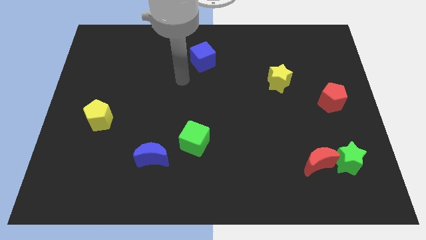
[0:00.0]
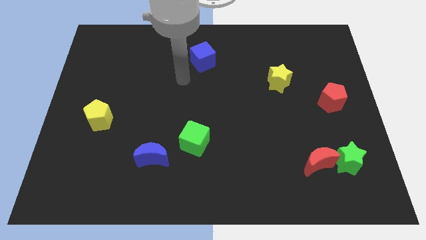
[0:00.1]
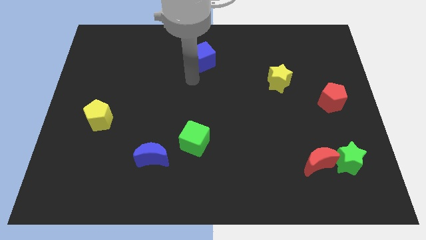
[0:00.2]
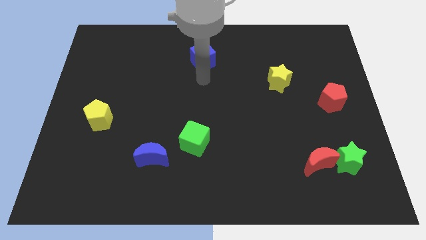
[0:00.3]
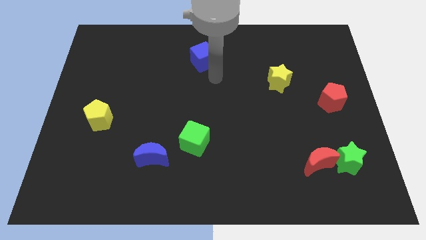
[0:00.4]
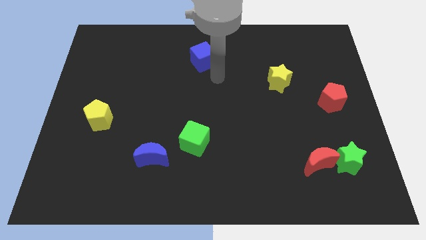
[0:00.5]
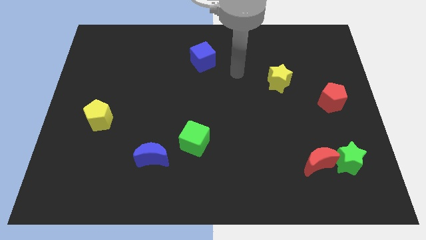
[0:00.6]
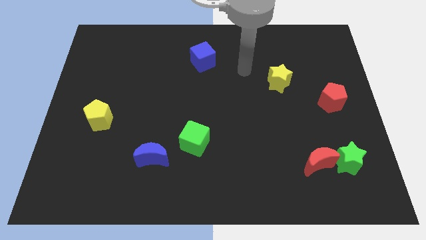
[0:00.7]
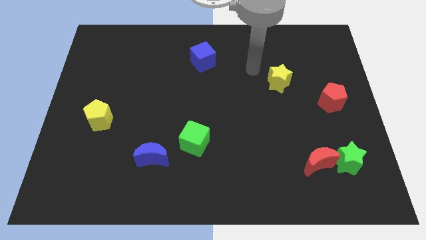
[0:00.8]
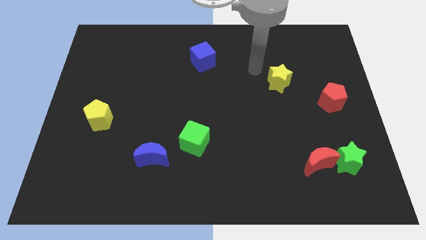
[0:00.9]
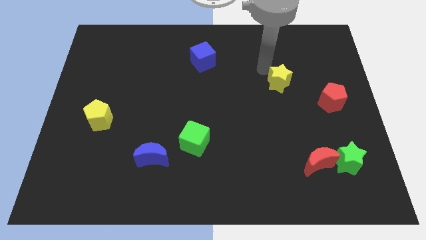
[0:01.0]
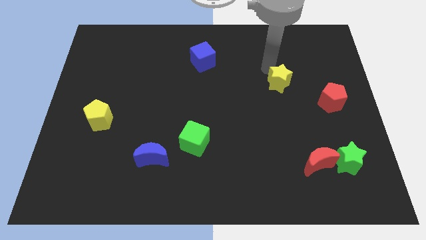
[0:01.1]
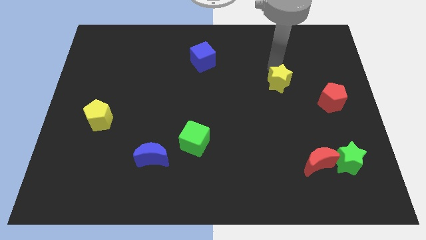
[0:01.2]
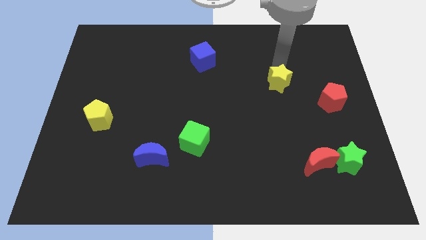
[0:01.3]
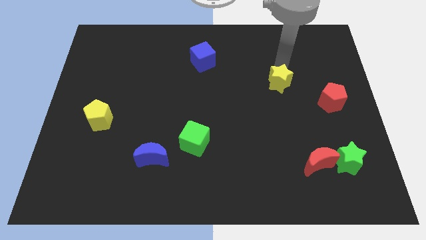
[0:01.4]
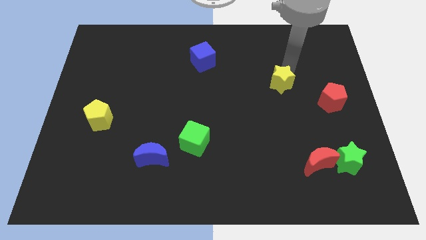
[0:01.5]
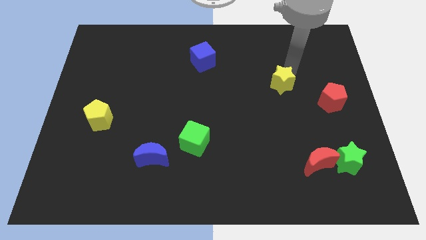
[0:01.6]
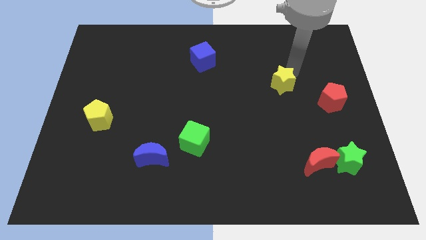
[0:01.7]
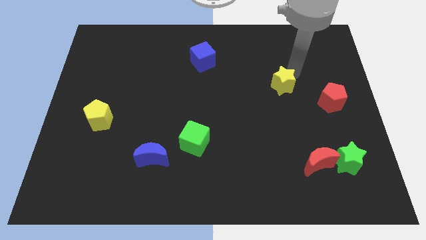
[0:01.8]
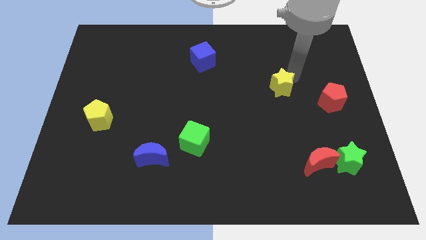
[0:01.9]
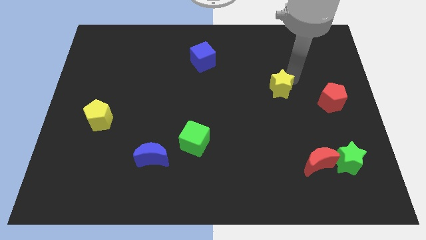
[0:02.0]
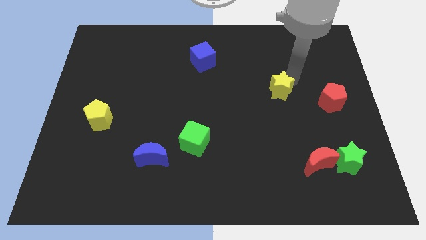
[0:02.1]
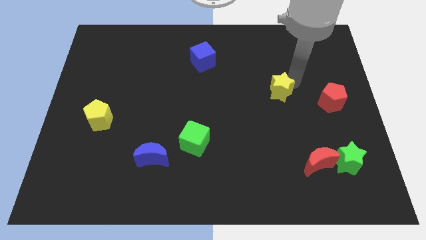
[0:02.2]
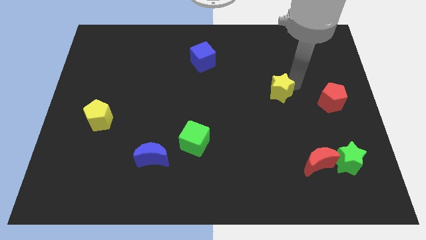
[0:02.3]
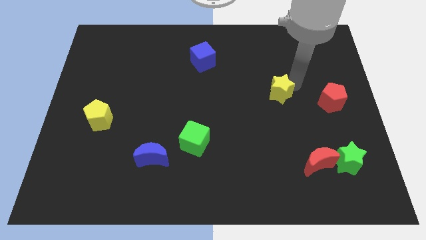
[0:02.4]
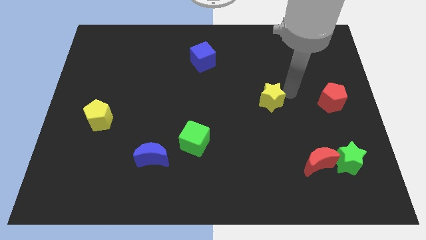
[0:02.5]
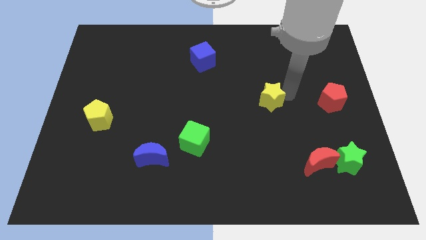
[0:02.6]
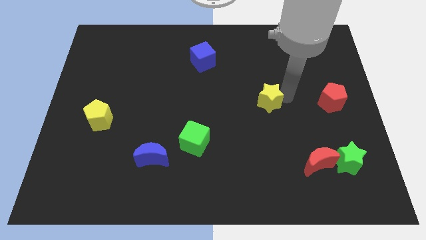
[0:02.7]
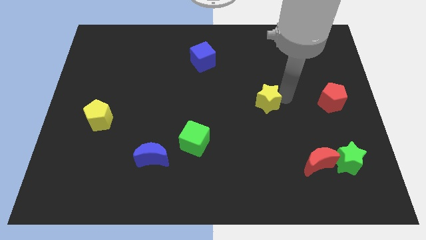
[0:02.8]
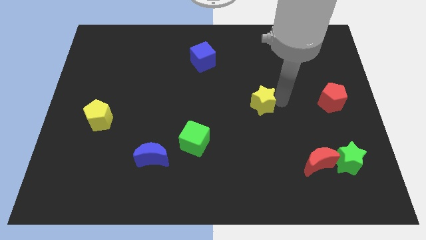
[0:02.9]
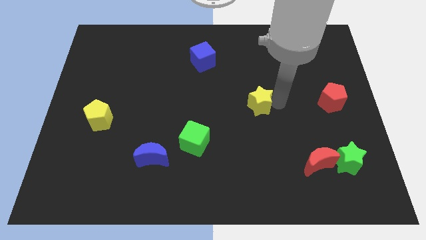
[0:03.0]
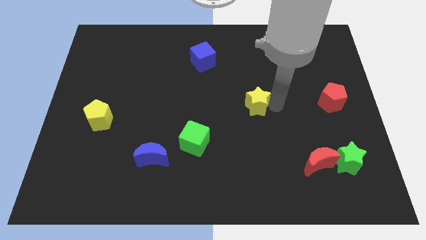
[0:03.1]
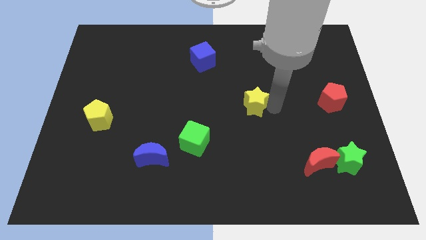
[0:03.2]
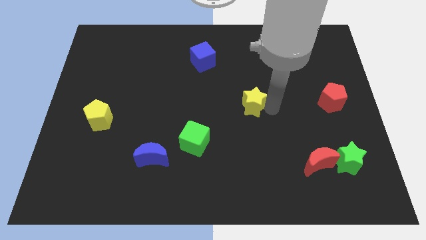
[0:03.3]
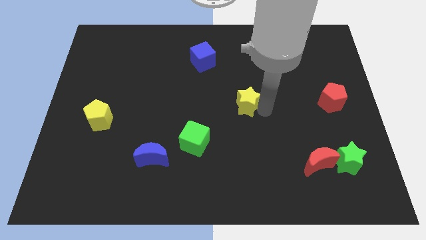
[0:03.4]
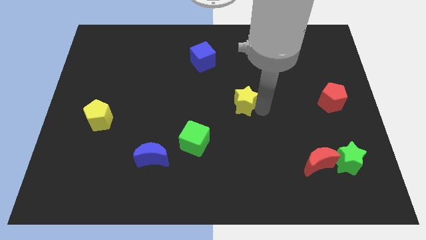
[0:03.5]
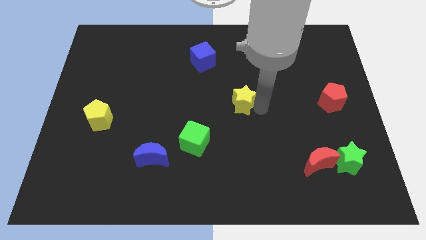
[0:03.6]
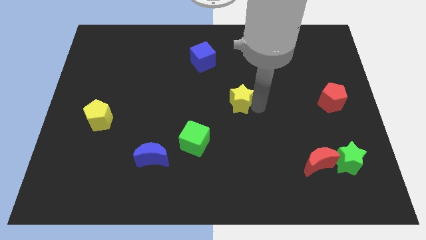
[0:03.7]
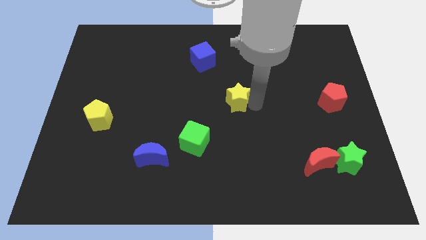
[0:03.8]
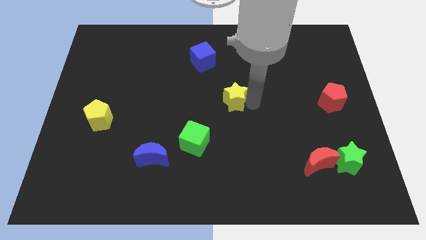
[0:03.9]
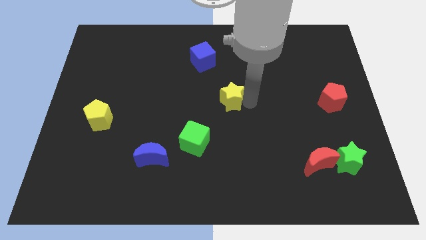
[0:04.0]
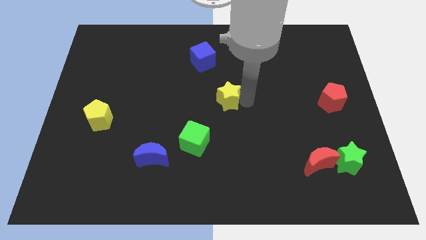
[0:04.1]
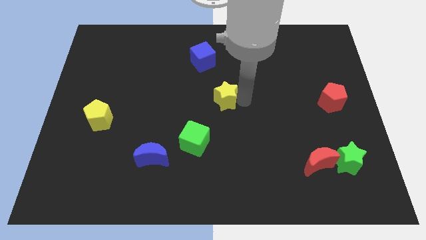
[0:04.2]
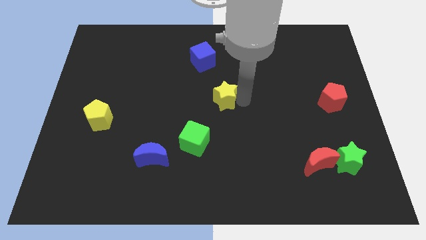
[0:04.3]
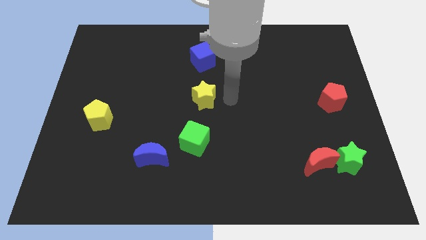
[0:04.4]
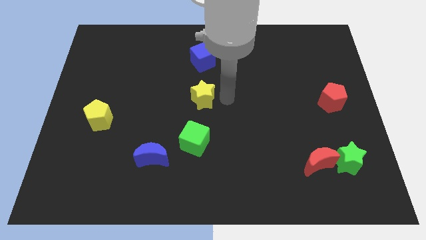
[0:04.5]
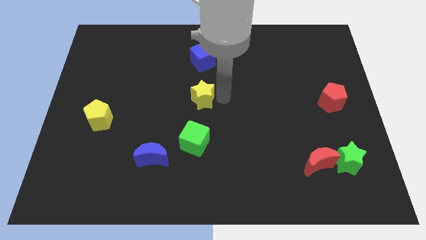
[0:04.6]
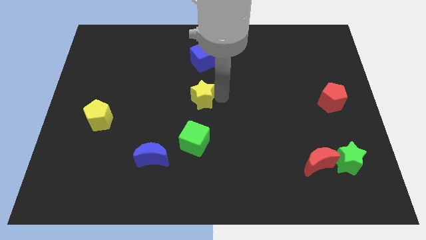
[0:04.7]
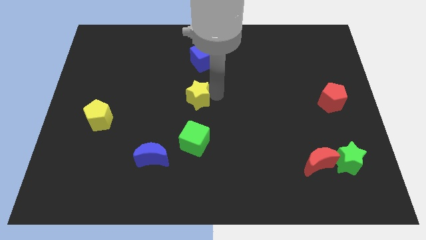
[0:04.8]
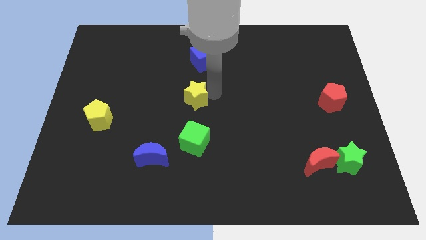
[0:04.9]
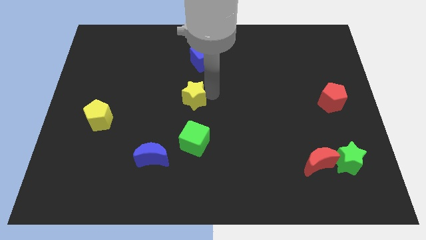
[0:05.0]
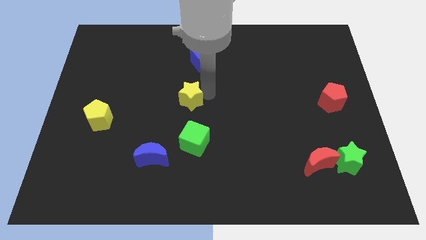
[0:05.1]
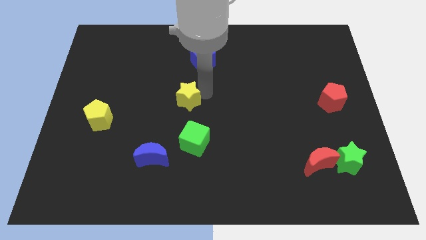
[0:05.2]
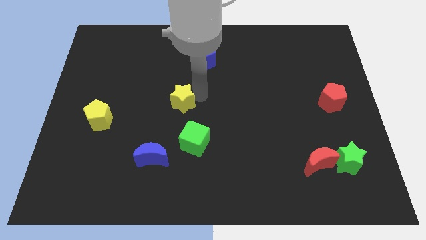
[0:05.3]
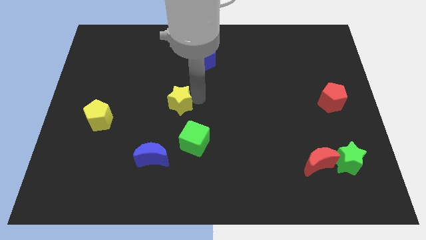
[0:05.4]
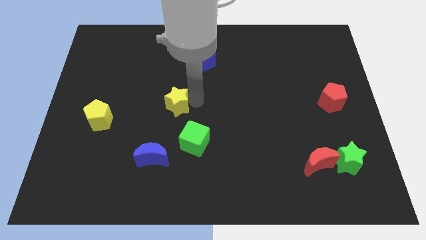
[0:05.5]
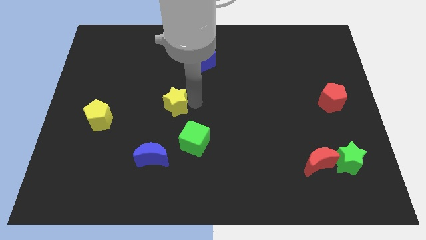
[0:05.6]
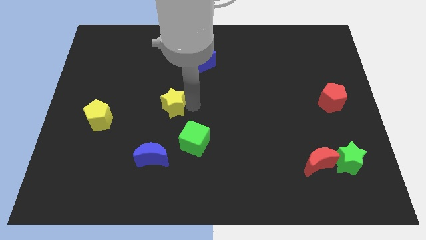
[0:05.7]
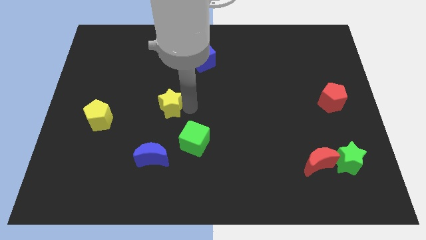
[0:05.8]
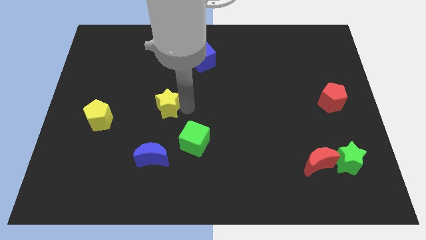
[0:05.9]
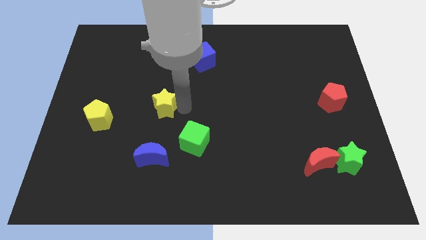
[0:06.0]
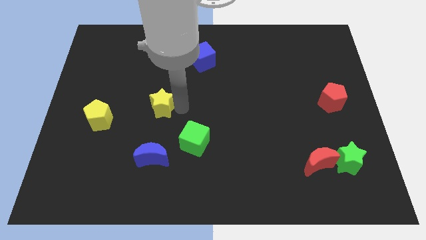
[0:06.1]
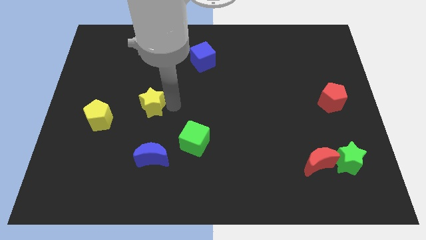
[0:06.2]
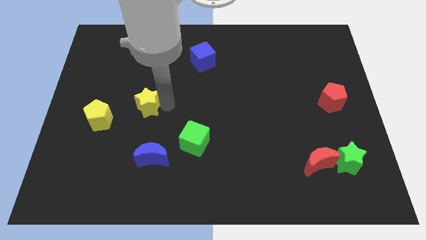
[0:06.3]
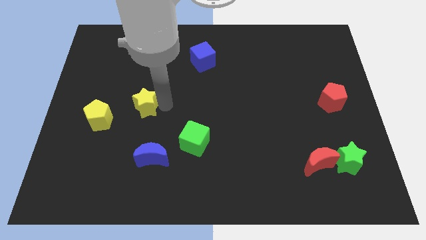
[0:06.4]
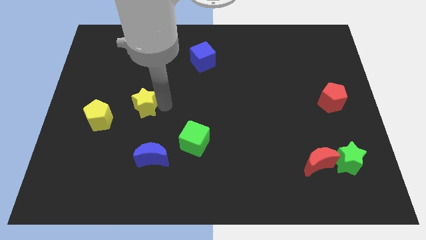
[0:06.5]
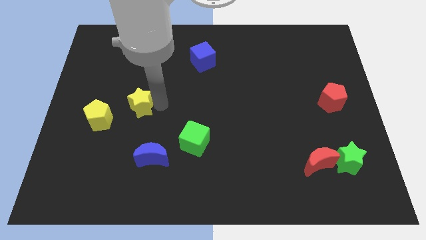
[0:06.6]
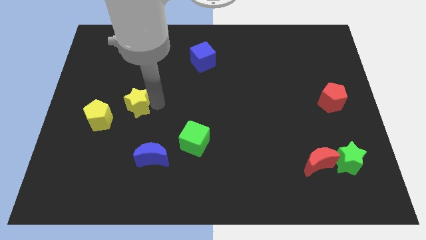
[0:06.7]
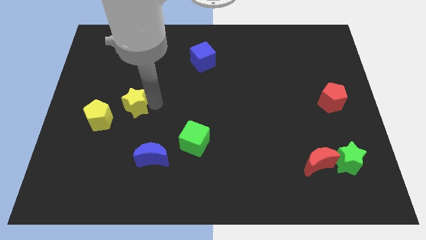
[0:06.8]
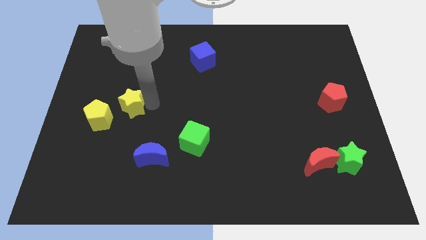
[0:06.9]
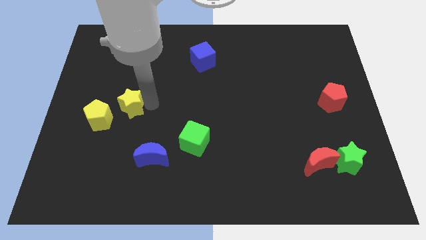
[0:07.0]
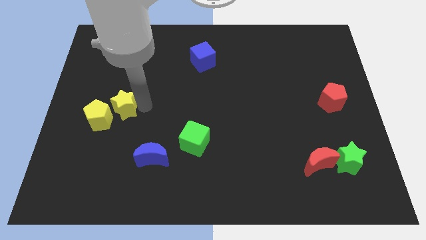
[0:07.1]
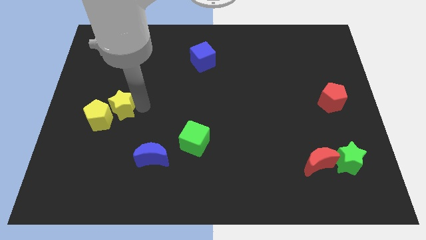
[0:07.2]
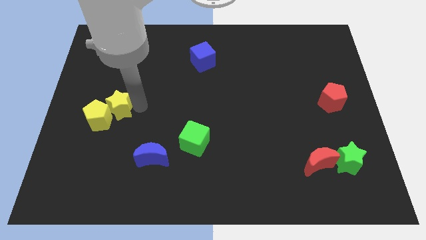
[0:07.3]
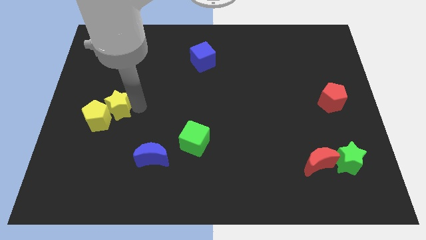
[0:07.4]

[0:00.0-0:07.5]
move the yellow star next to the yellow pentagon

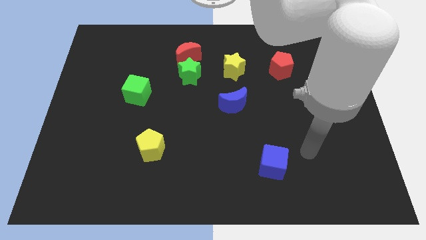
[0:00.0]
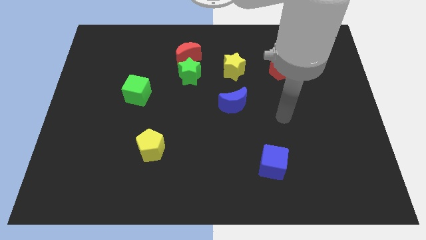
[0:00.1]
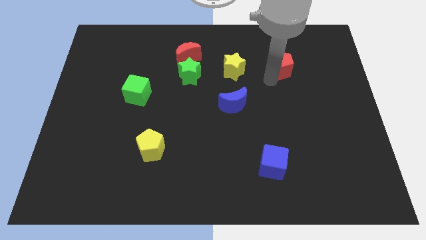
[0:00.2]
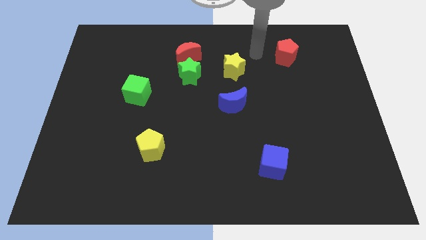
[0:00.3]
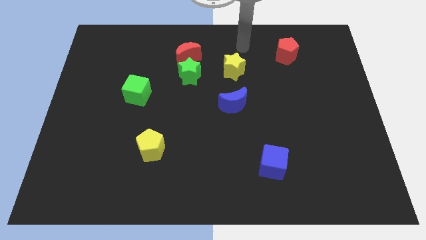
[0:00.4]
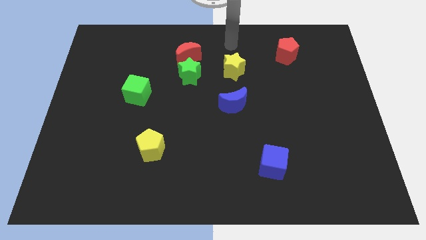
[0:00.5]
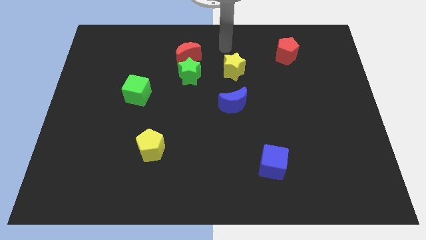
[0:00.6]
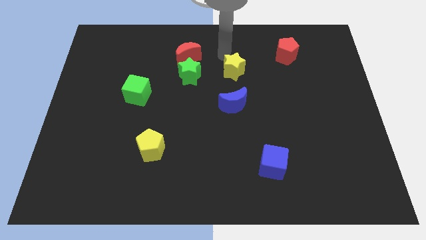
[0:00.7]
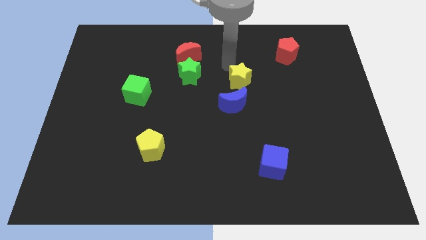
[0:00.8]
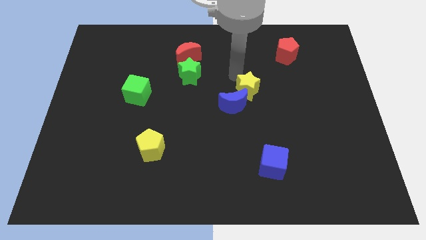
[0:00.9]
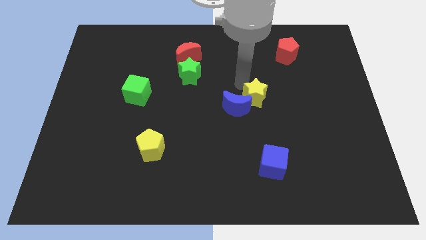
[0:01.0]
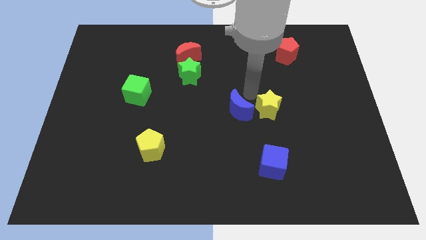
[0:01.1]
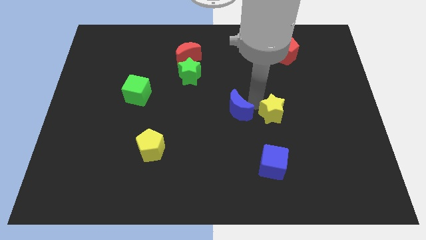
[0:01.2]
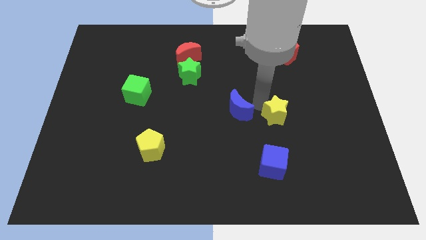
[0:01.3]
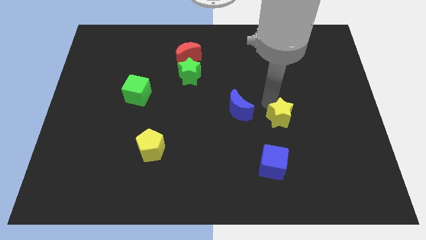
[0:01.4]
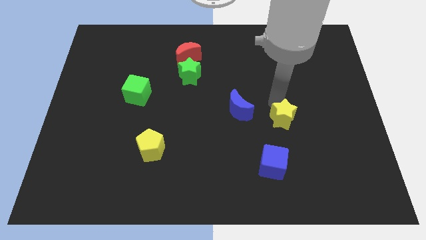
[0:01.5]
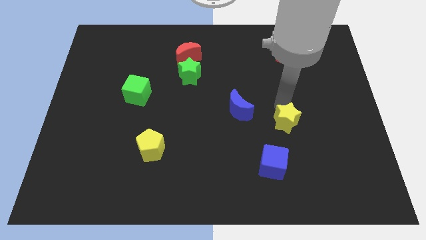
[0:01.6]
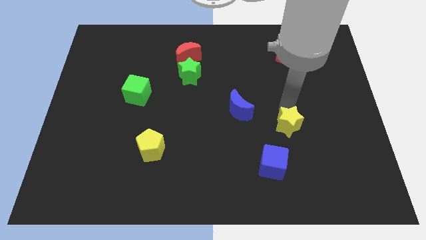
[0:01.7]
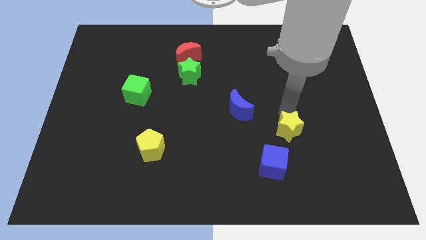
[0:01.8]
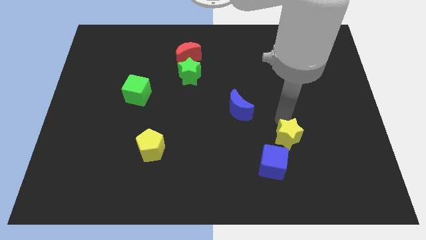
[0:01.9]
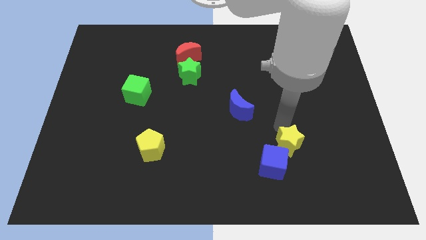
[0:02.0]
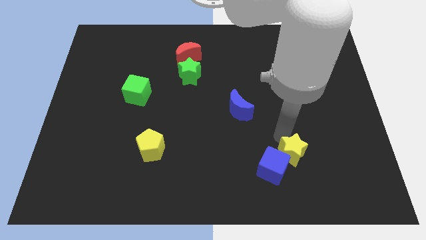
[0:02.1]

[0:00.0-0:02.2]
slide the yellow star towards the blue cube
